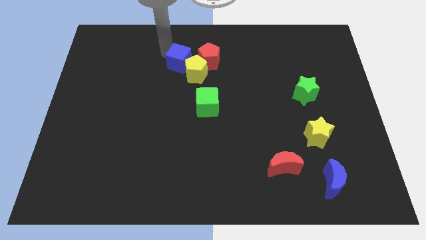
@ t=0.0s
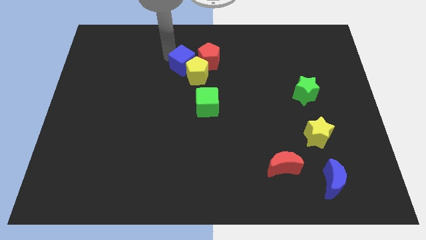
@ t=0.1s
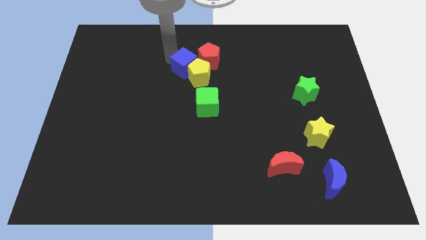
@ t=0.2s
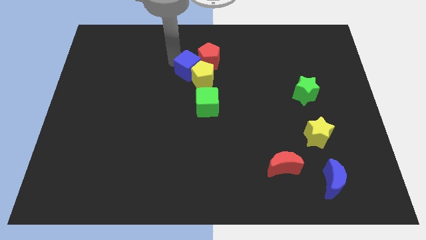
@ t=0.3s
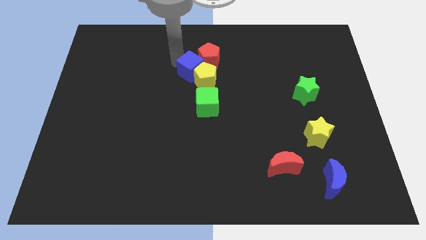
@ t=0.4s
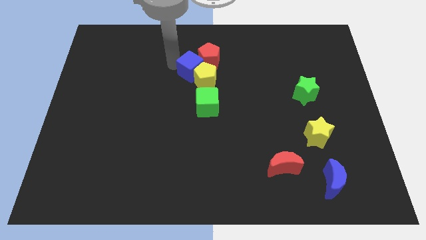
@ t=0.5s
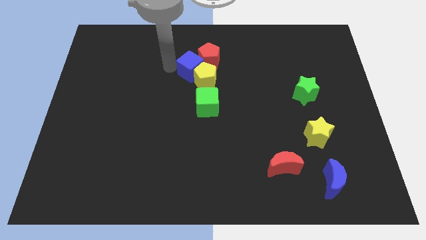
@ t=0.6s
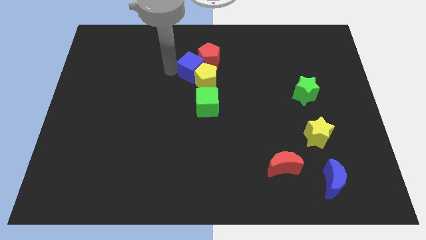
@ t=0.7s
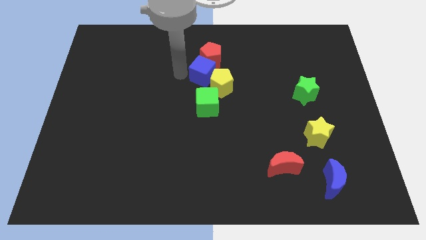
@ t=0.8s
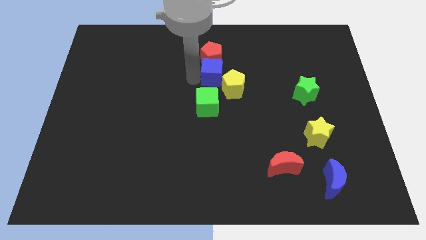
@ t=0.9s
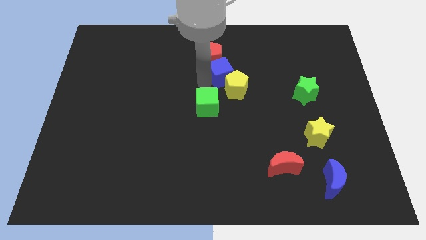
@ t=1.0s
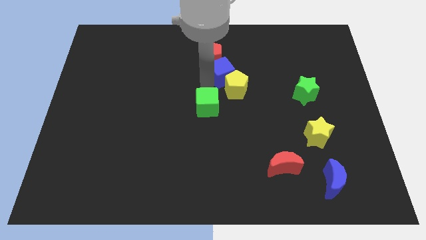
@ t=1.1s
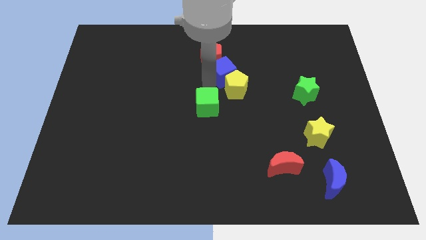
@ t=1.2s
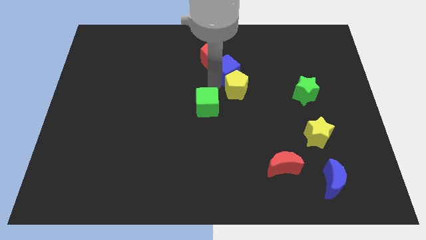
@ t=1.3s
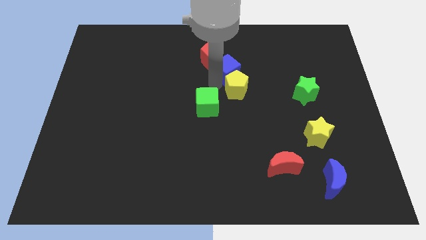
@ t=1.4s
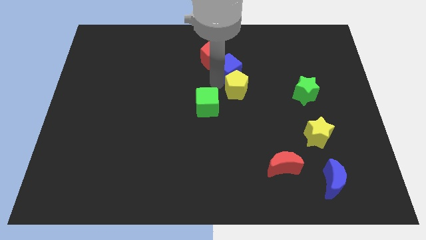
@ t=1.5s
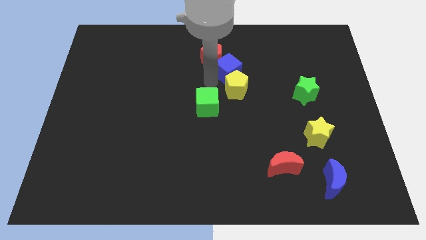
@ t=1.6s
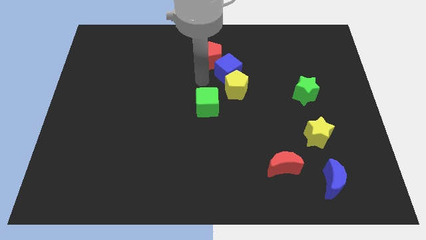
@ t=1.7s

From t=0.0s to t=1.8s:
move blue cube between the yellow pentagon and red pentagon

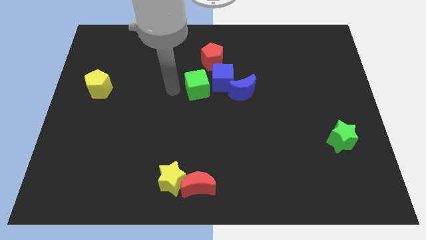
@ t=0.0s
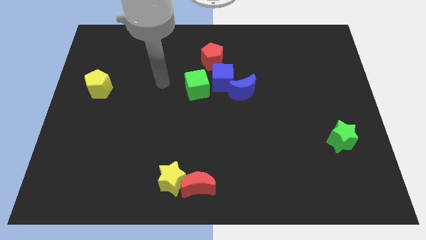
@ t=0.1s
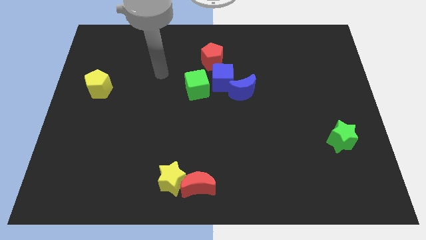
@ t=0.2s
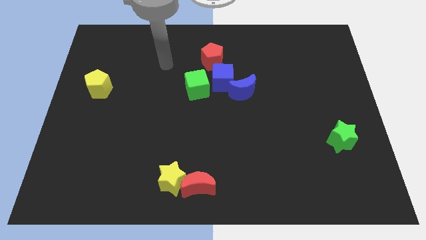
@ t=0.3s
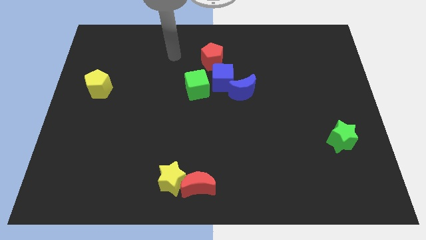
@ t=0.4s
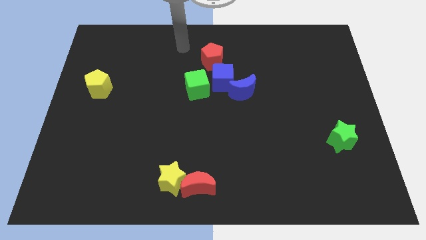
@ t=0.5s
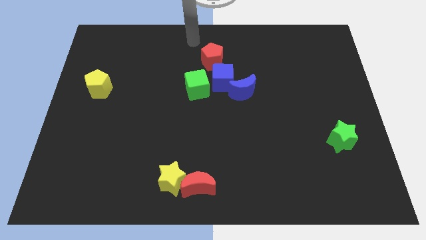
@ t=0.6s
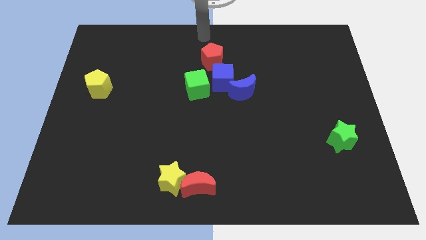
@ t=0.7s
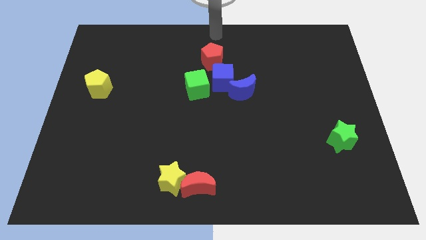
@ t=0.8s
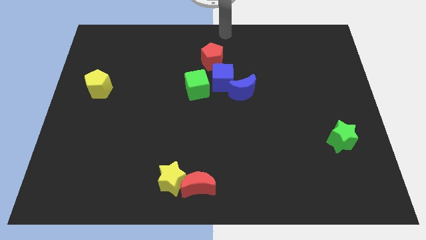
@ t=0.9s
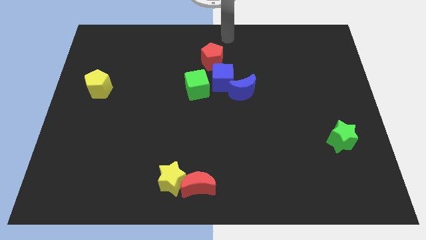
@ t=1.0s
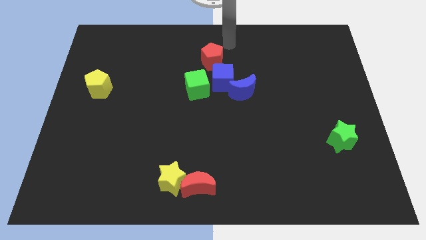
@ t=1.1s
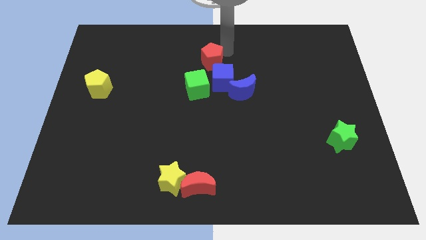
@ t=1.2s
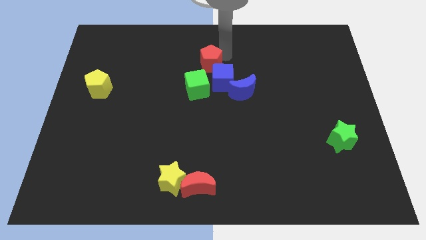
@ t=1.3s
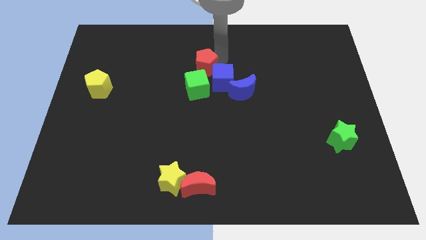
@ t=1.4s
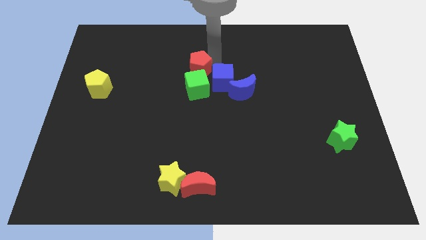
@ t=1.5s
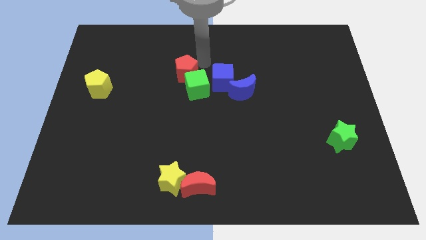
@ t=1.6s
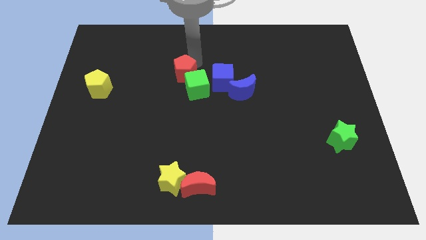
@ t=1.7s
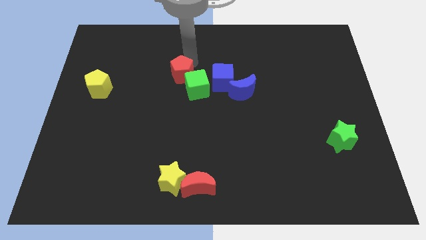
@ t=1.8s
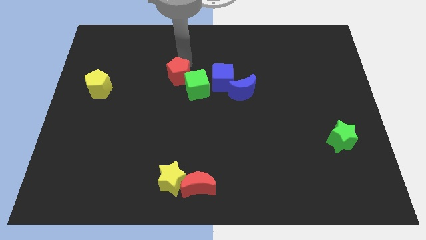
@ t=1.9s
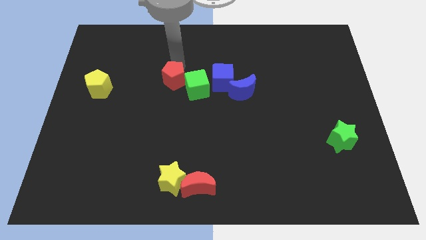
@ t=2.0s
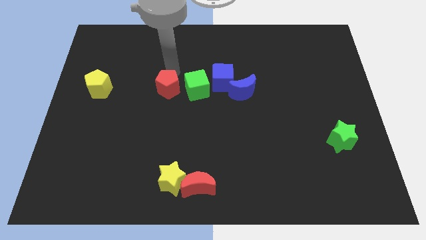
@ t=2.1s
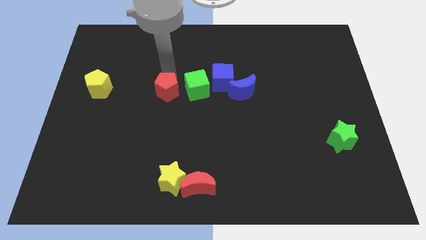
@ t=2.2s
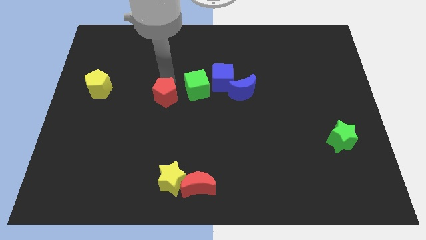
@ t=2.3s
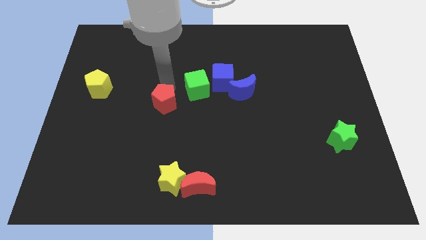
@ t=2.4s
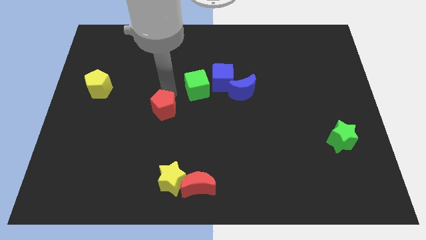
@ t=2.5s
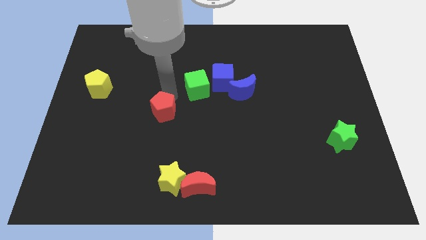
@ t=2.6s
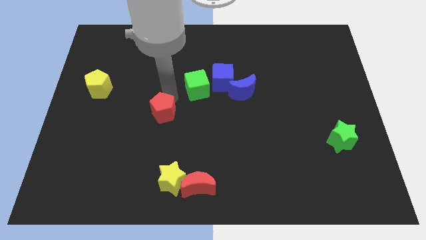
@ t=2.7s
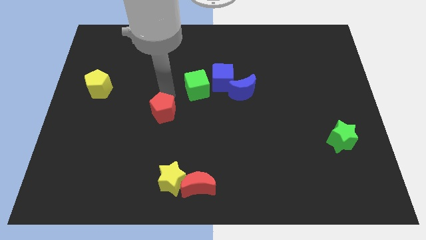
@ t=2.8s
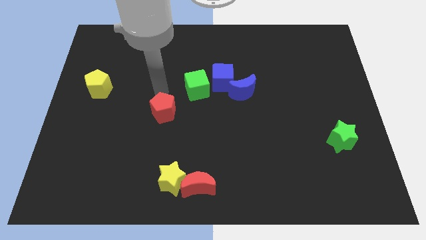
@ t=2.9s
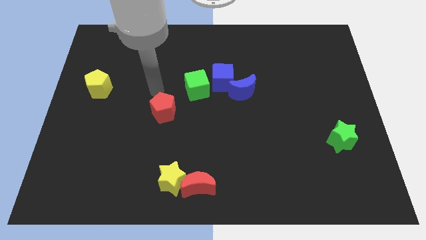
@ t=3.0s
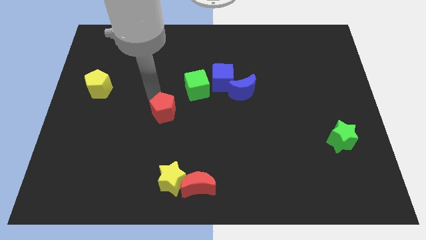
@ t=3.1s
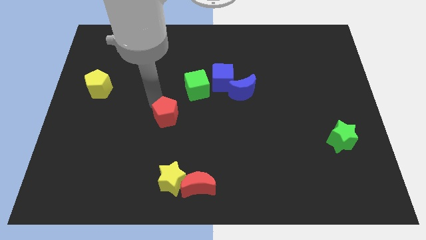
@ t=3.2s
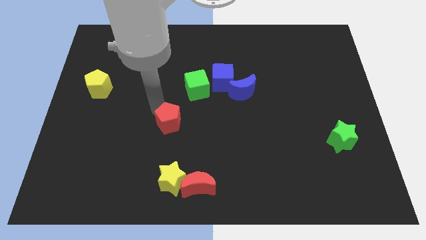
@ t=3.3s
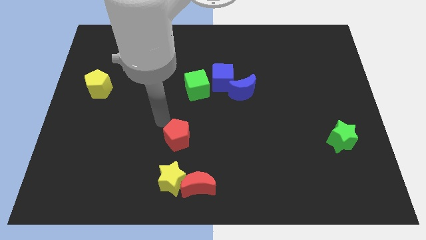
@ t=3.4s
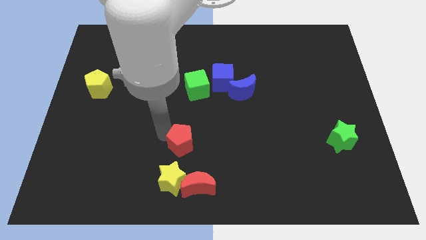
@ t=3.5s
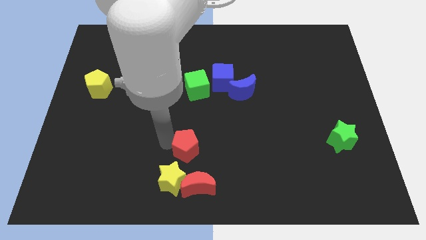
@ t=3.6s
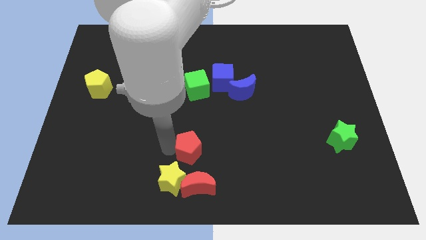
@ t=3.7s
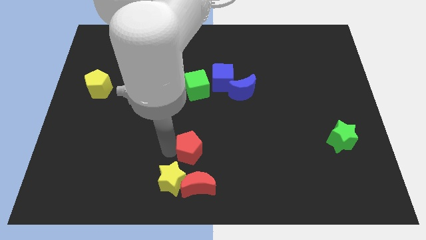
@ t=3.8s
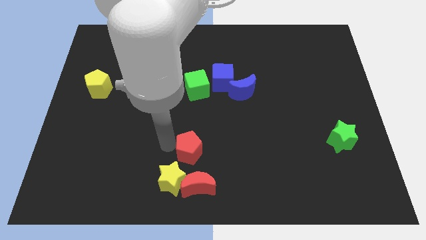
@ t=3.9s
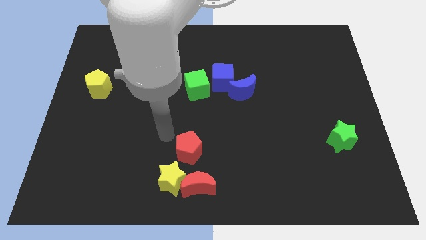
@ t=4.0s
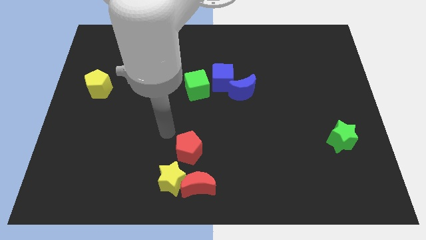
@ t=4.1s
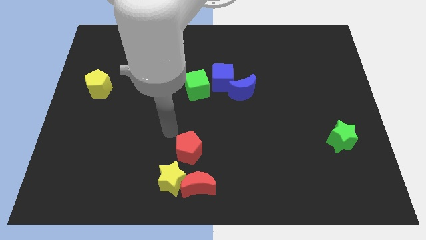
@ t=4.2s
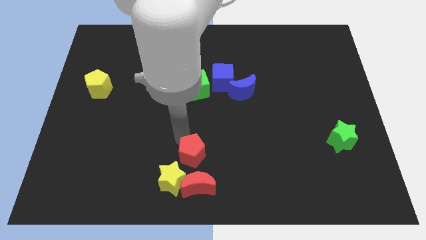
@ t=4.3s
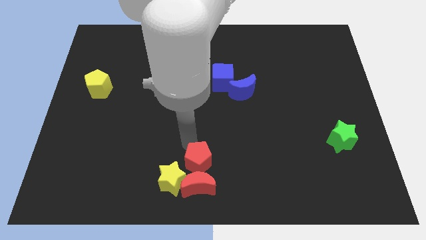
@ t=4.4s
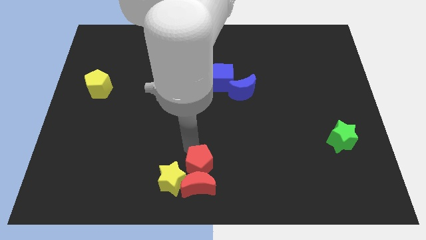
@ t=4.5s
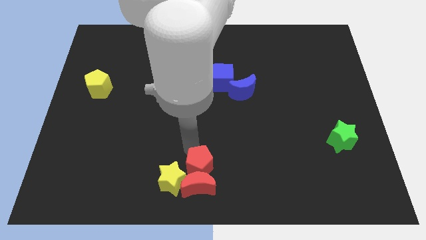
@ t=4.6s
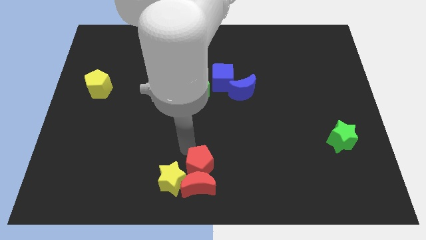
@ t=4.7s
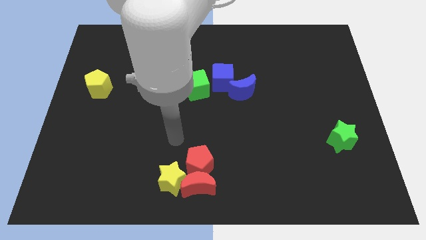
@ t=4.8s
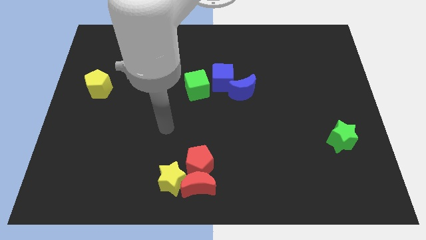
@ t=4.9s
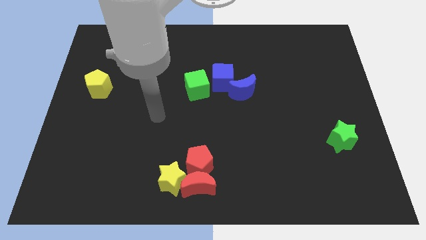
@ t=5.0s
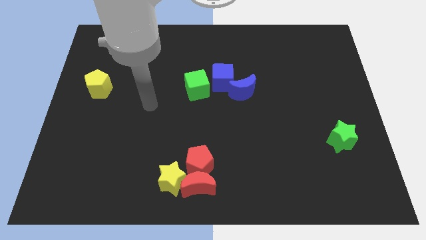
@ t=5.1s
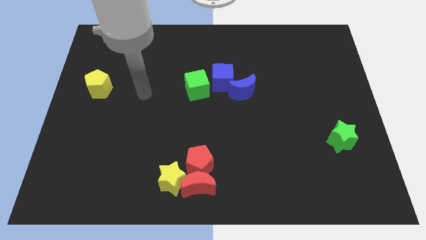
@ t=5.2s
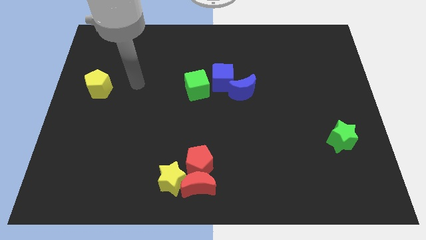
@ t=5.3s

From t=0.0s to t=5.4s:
push the red pentagon to the bottom side of the board

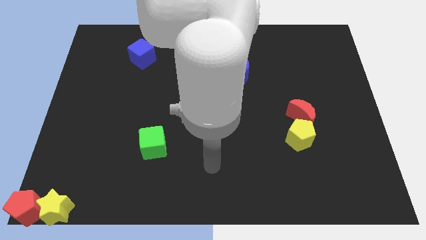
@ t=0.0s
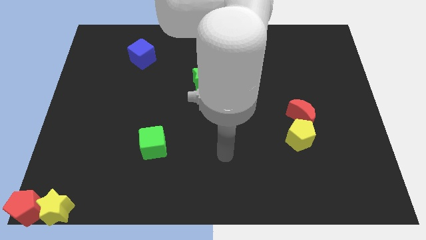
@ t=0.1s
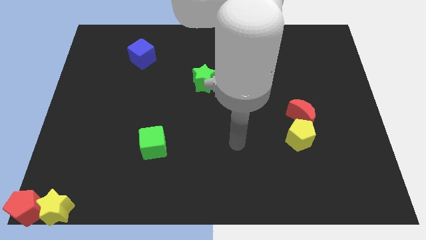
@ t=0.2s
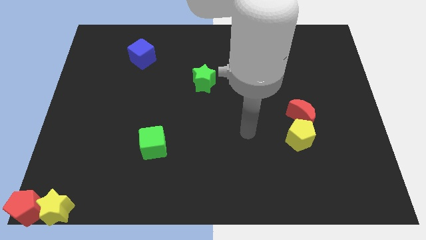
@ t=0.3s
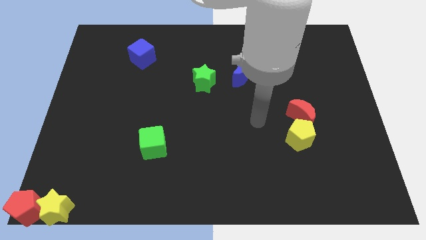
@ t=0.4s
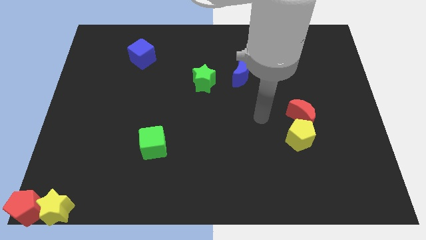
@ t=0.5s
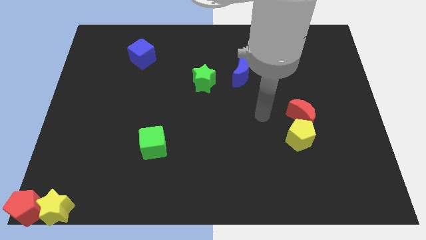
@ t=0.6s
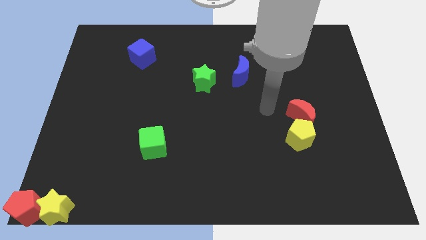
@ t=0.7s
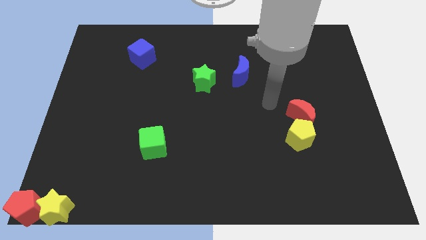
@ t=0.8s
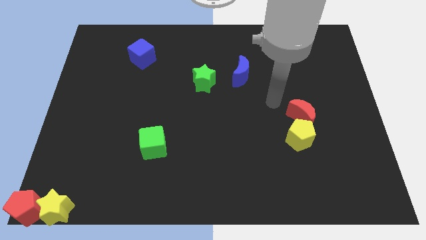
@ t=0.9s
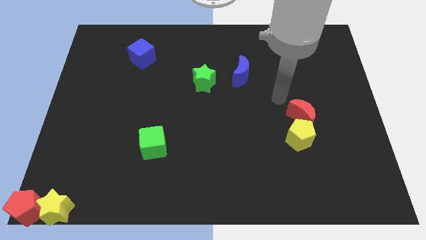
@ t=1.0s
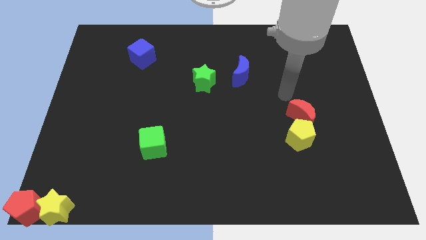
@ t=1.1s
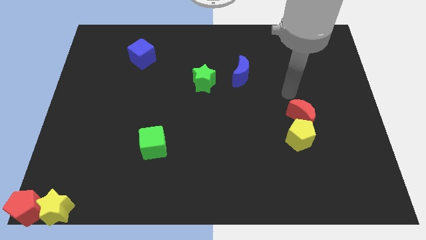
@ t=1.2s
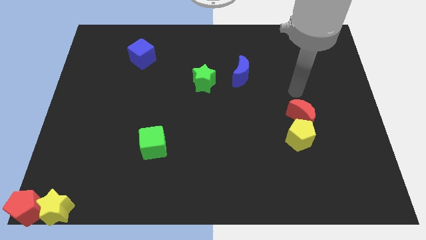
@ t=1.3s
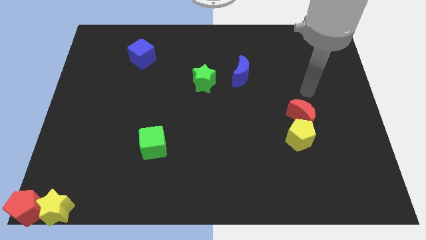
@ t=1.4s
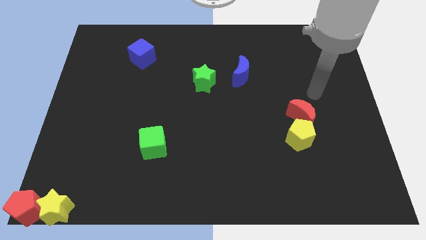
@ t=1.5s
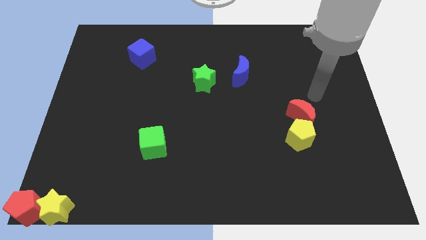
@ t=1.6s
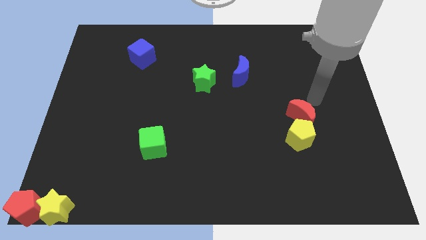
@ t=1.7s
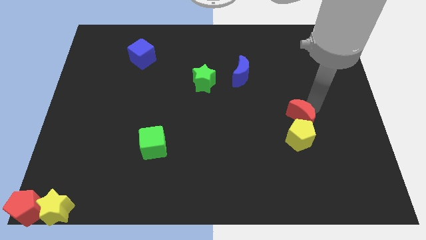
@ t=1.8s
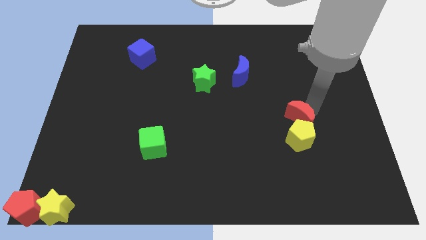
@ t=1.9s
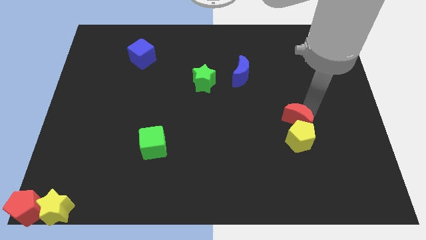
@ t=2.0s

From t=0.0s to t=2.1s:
tap the red crescent
